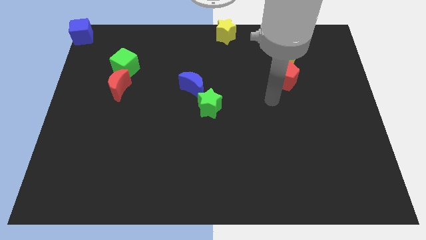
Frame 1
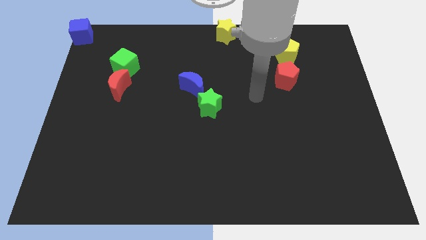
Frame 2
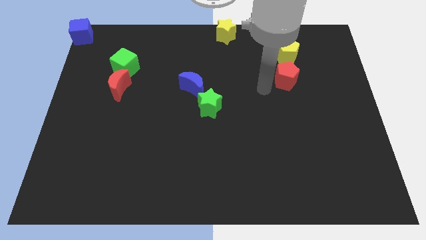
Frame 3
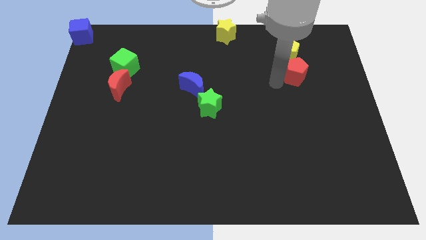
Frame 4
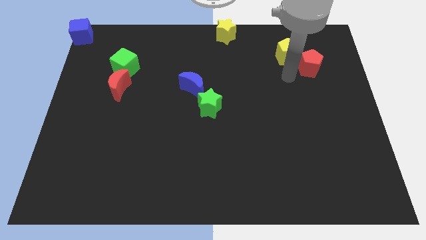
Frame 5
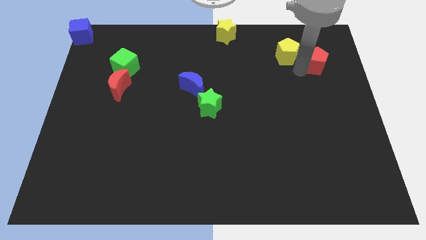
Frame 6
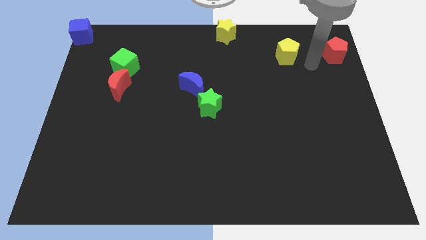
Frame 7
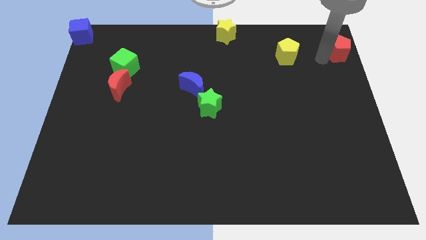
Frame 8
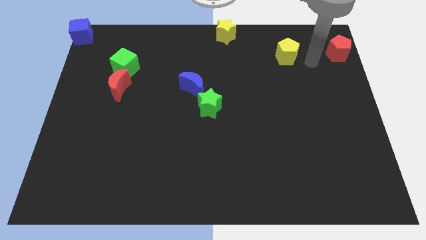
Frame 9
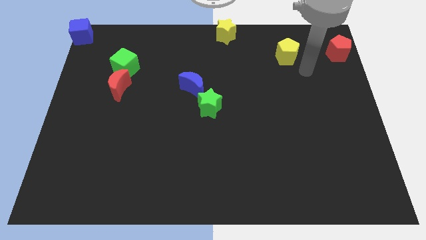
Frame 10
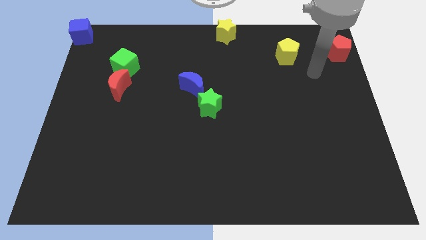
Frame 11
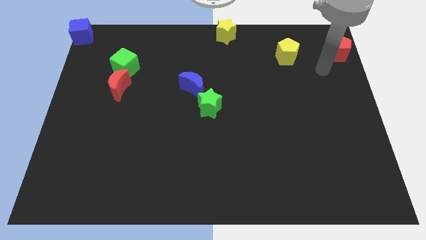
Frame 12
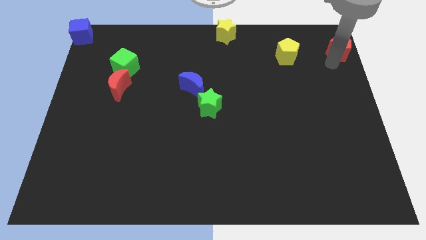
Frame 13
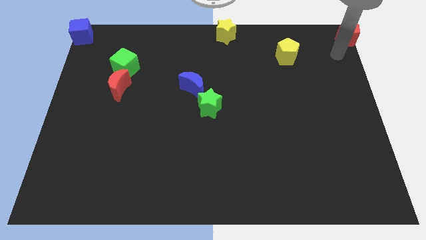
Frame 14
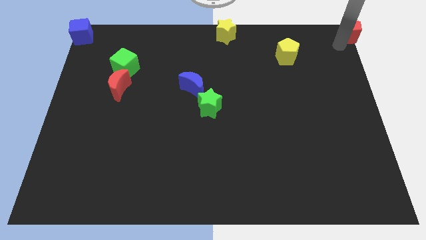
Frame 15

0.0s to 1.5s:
place red pentagon towards top right corner

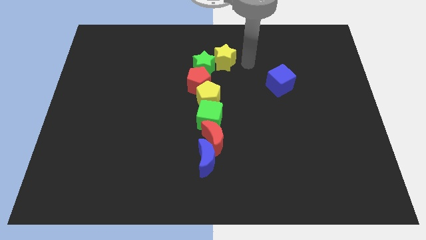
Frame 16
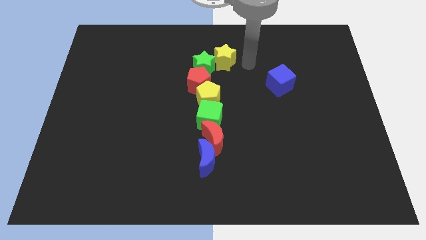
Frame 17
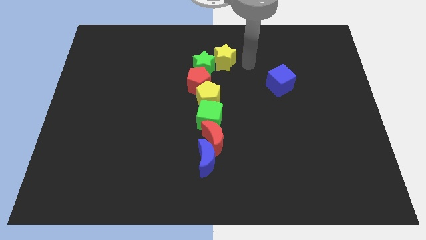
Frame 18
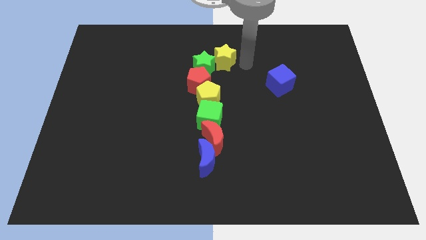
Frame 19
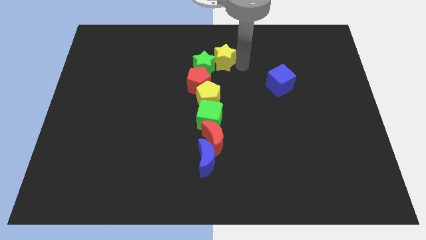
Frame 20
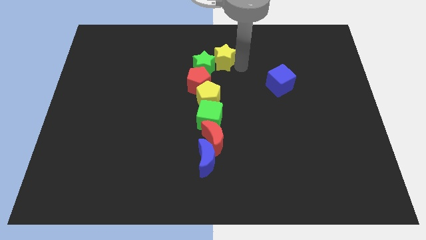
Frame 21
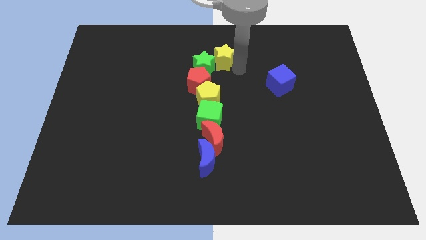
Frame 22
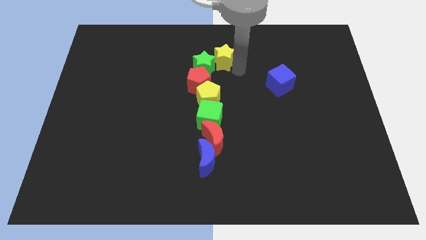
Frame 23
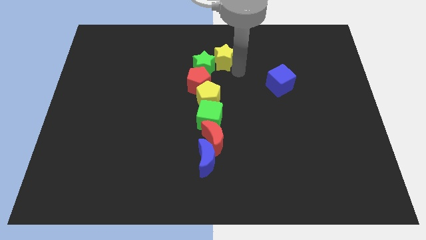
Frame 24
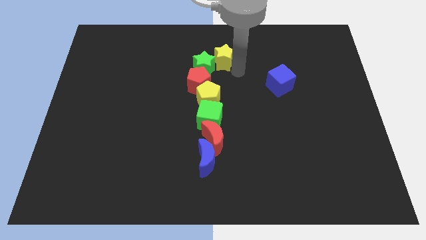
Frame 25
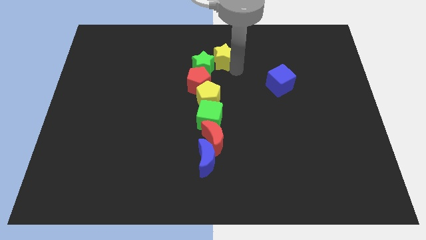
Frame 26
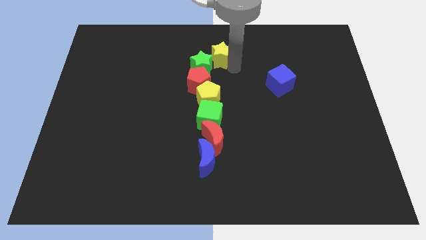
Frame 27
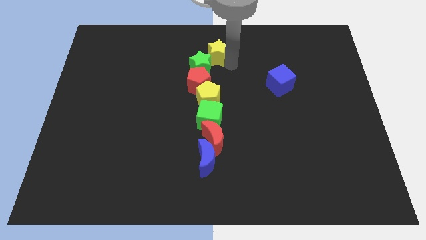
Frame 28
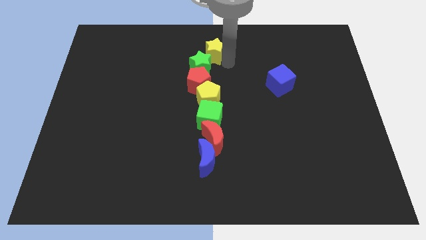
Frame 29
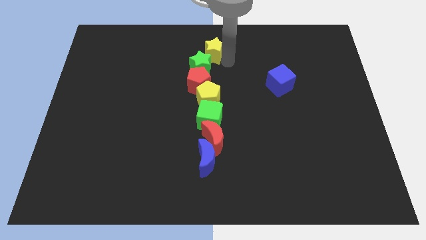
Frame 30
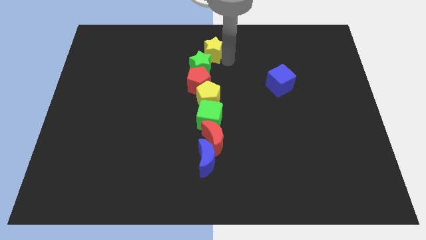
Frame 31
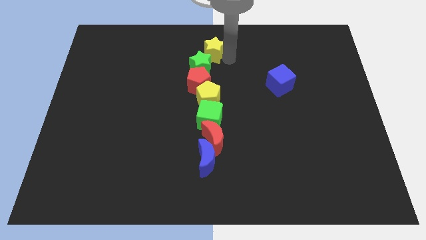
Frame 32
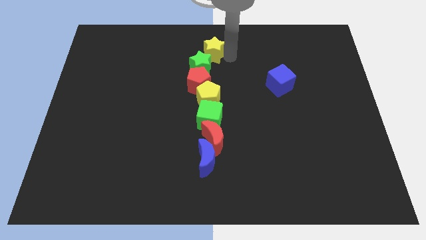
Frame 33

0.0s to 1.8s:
move the yellow star to the top of the green star

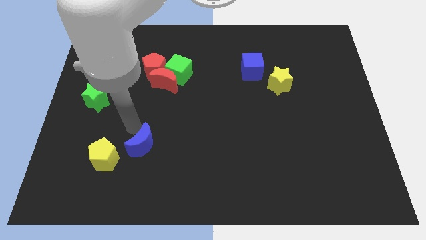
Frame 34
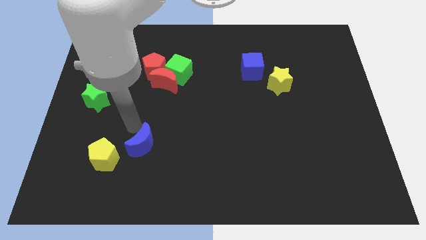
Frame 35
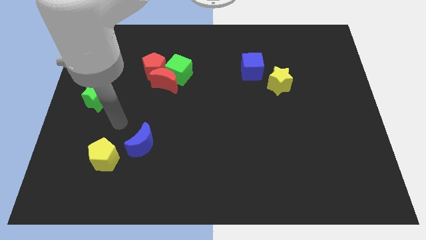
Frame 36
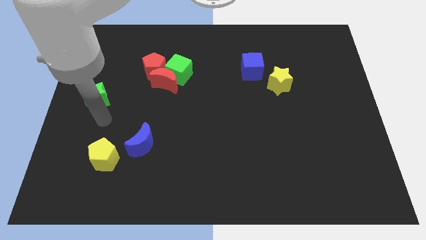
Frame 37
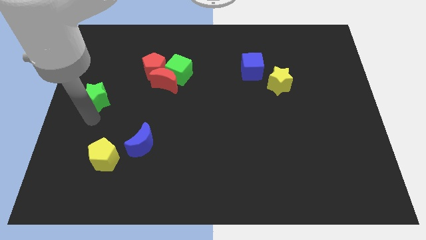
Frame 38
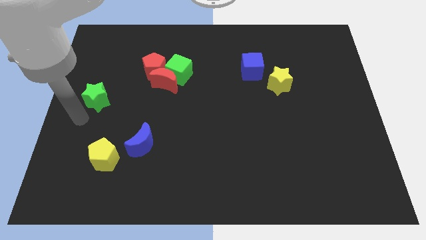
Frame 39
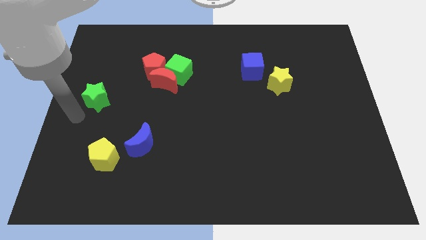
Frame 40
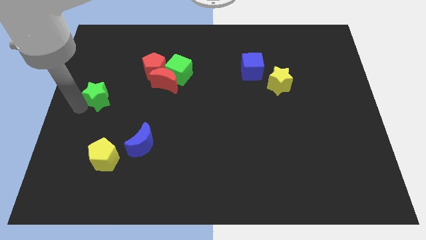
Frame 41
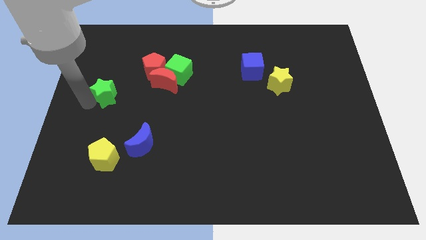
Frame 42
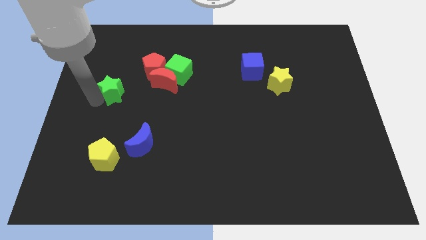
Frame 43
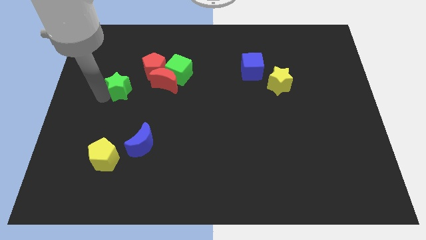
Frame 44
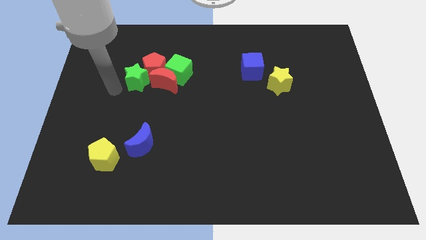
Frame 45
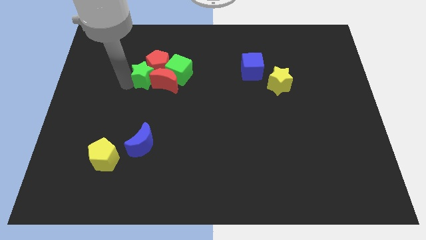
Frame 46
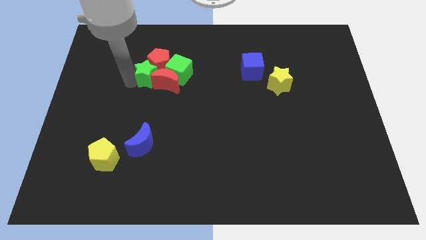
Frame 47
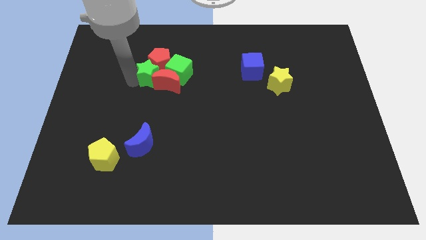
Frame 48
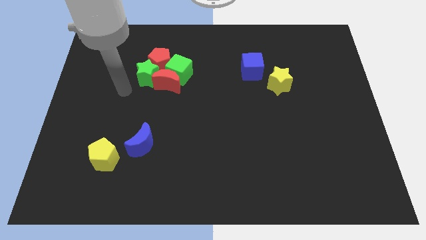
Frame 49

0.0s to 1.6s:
move the green star into the red pentagon

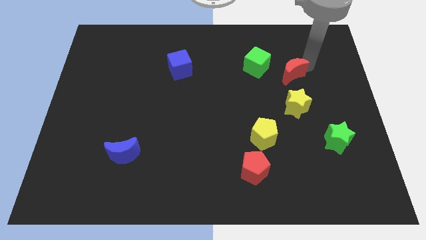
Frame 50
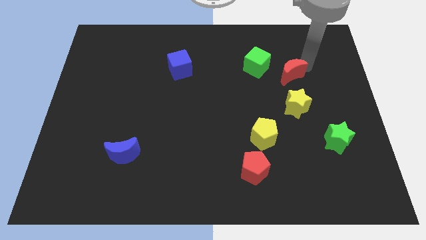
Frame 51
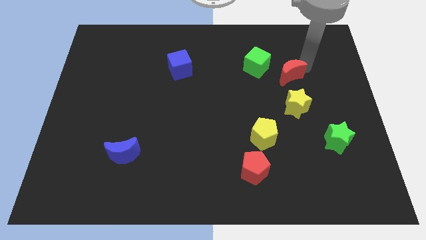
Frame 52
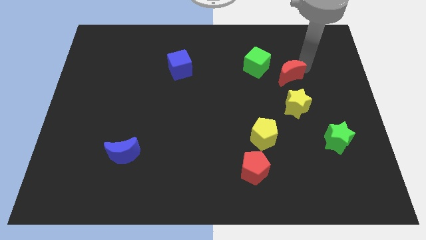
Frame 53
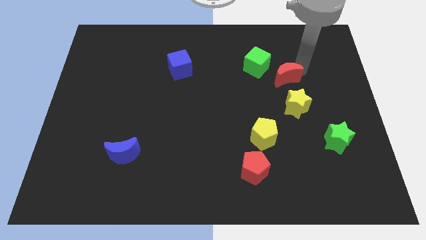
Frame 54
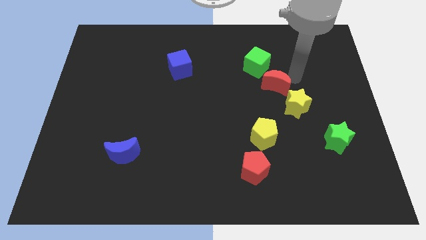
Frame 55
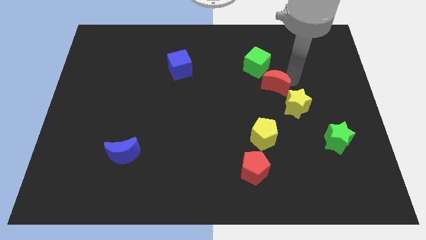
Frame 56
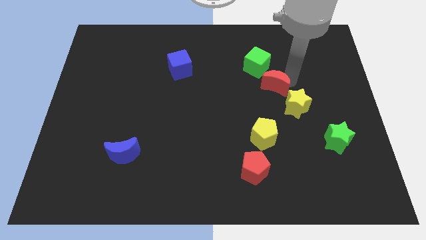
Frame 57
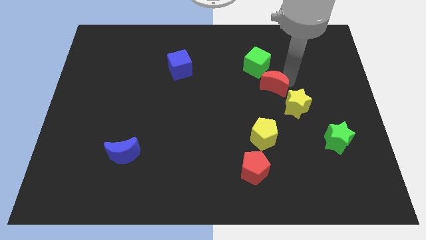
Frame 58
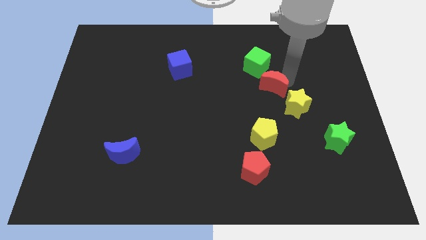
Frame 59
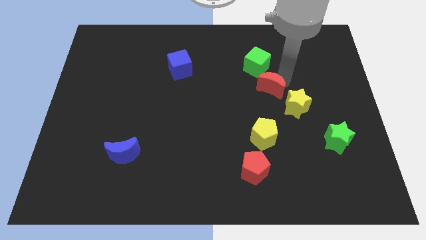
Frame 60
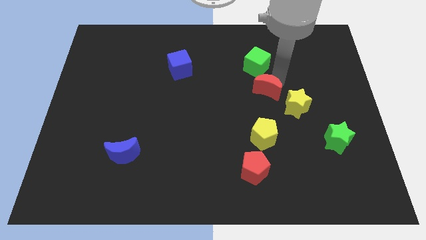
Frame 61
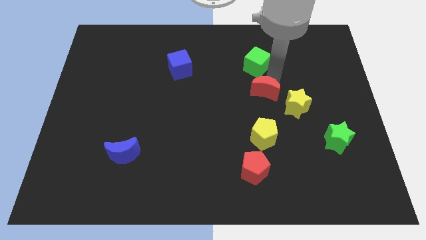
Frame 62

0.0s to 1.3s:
move red moon slightly down

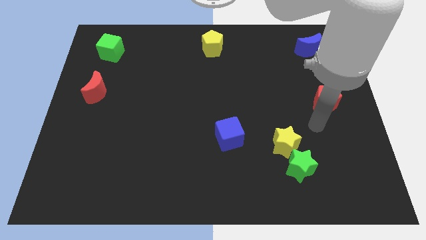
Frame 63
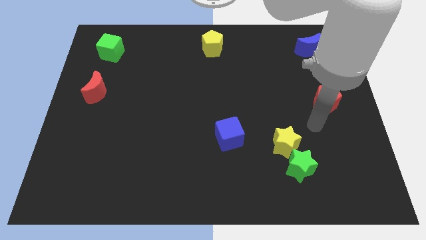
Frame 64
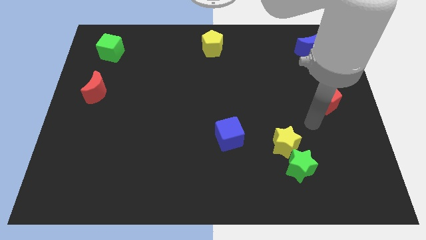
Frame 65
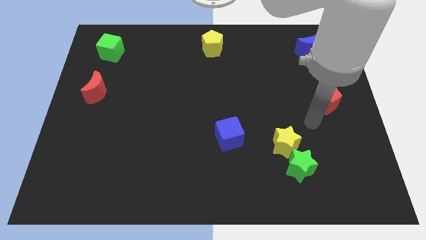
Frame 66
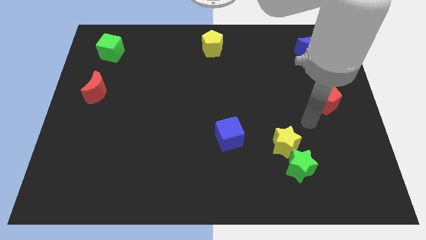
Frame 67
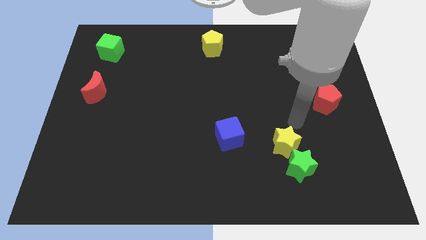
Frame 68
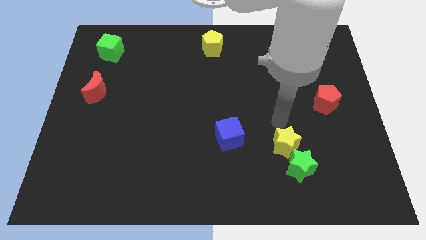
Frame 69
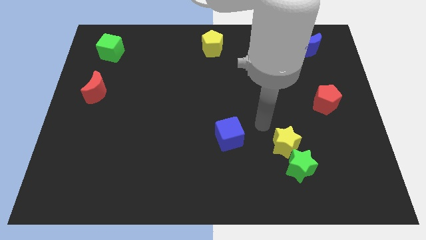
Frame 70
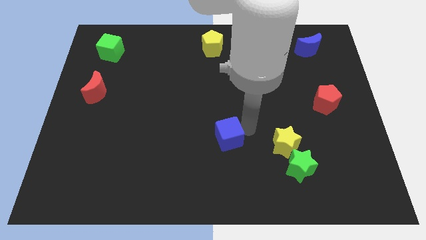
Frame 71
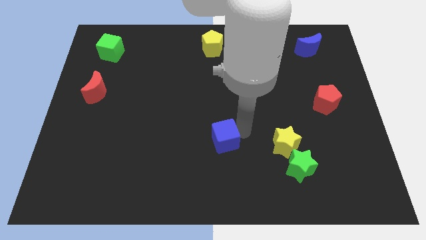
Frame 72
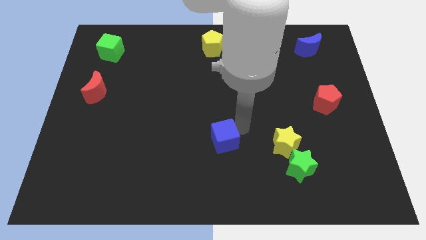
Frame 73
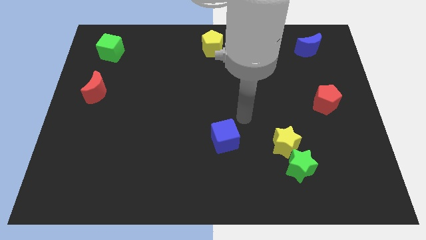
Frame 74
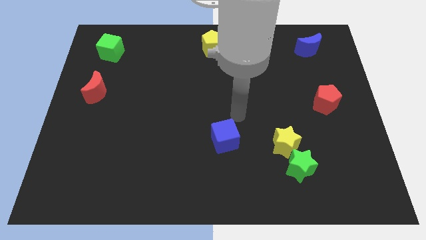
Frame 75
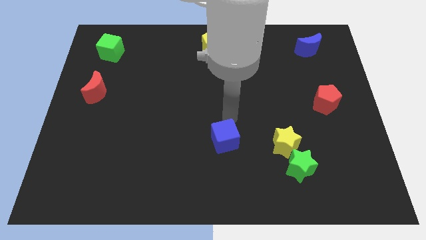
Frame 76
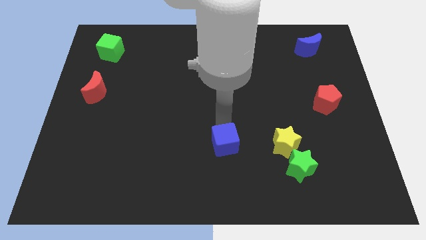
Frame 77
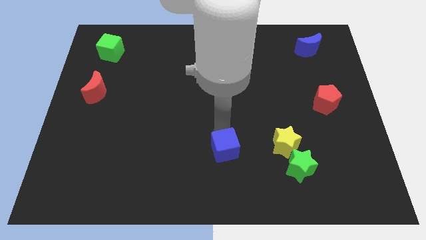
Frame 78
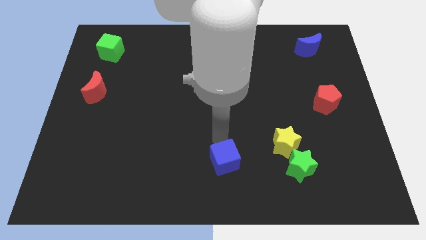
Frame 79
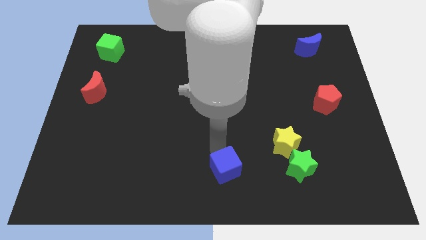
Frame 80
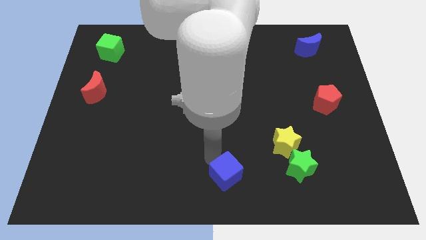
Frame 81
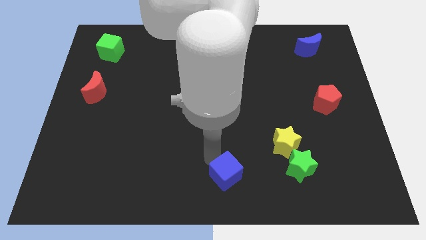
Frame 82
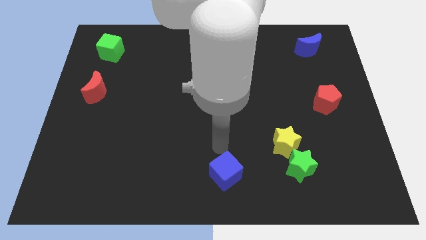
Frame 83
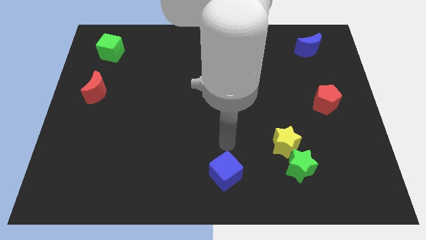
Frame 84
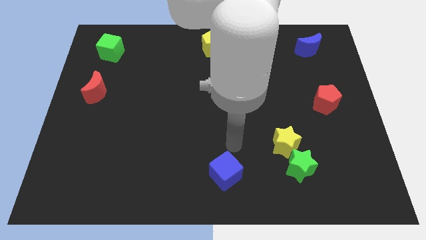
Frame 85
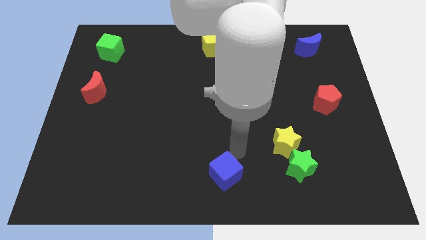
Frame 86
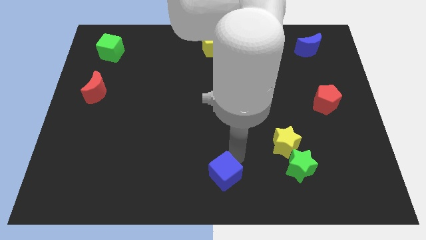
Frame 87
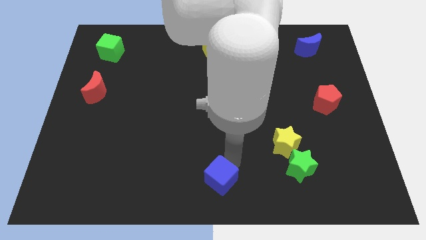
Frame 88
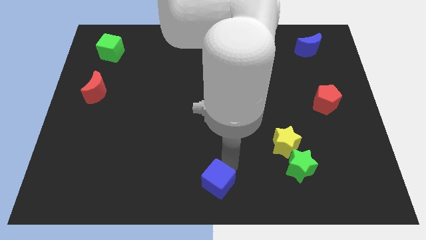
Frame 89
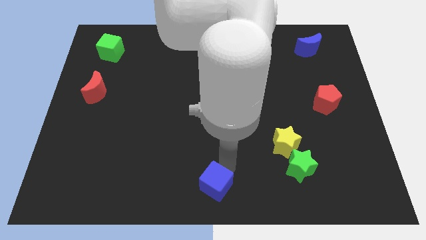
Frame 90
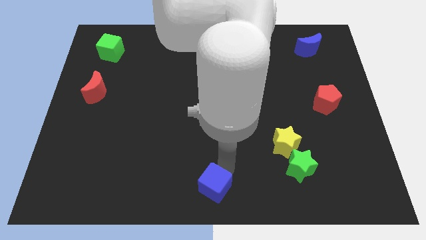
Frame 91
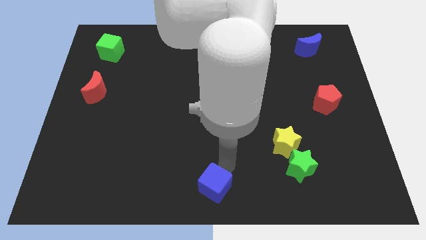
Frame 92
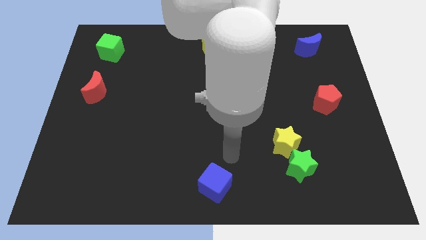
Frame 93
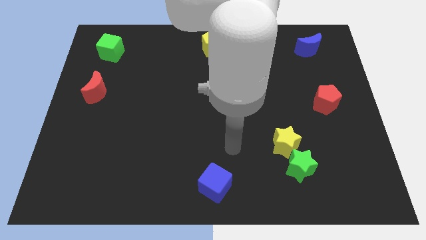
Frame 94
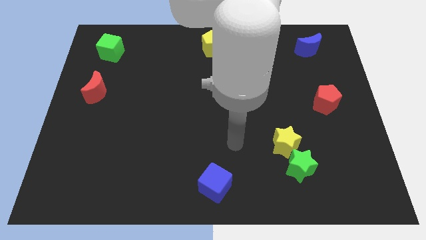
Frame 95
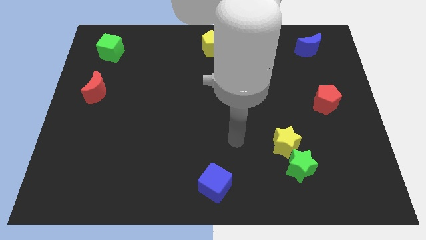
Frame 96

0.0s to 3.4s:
push blue cube towards bottom middle of the board
